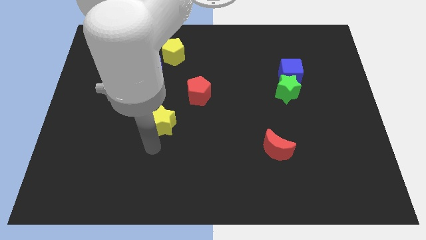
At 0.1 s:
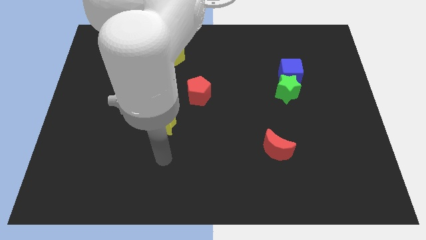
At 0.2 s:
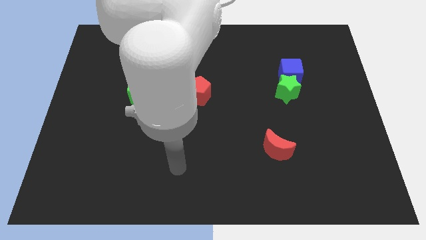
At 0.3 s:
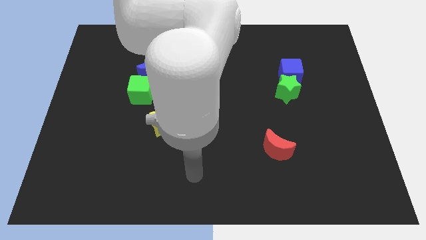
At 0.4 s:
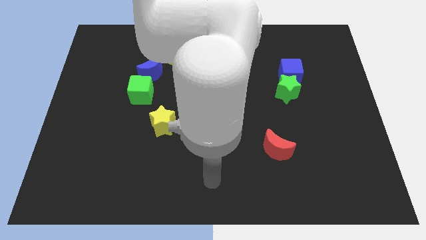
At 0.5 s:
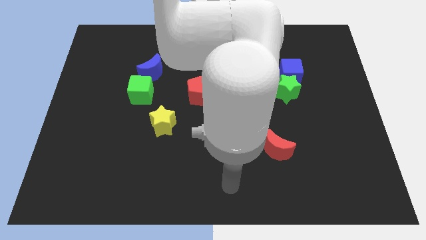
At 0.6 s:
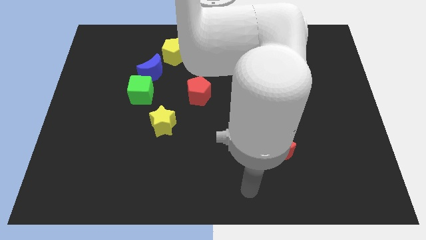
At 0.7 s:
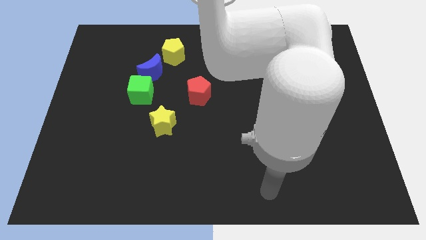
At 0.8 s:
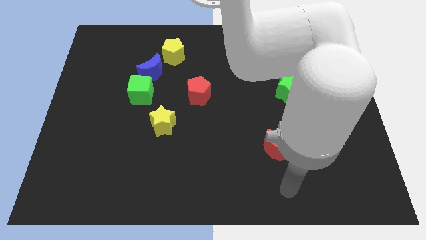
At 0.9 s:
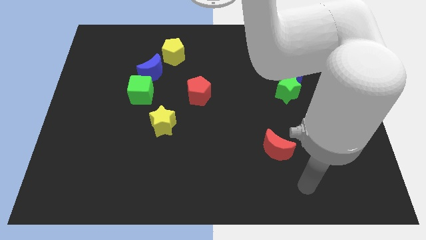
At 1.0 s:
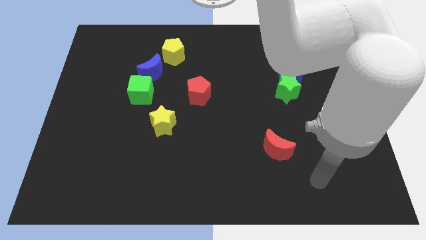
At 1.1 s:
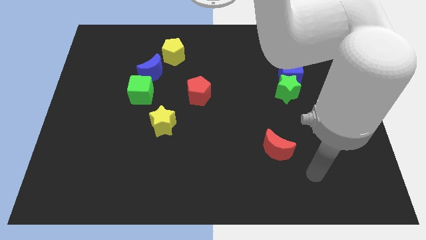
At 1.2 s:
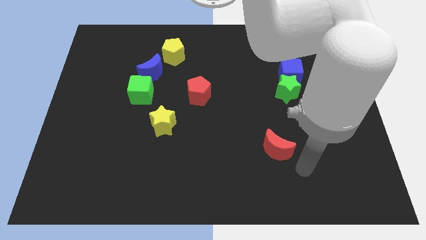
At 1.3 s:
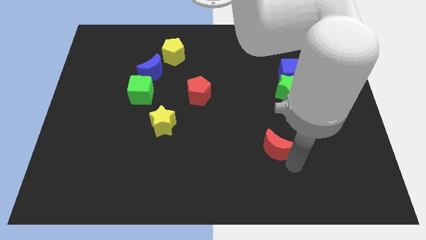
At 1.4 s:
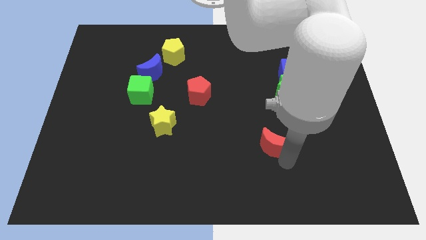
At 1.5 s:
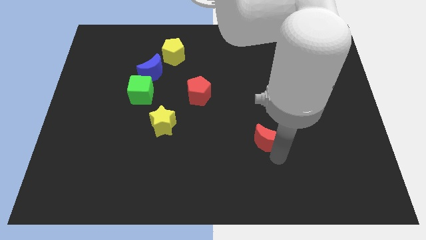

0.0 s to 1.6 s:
place the arm down to the red moon

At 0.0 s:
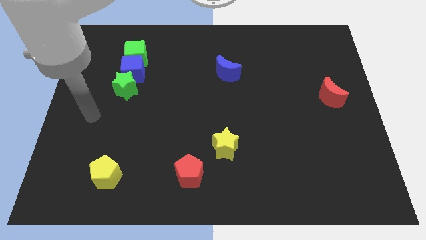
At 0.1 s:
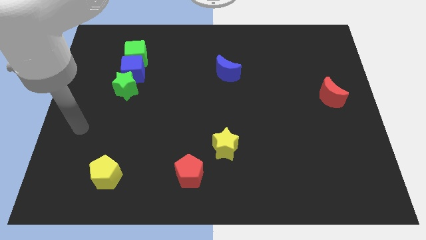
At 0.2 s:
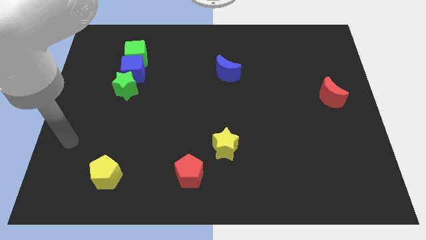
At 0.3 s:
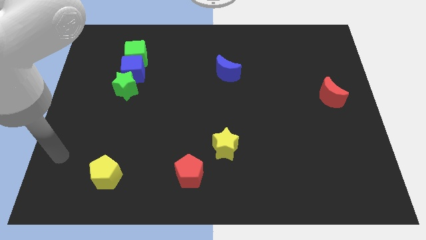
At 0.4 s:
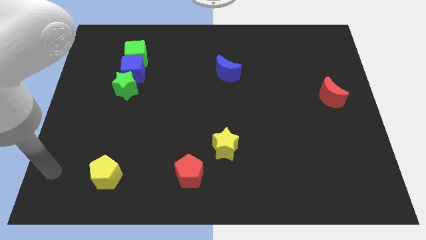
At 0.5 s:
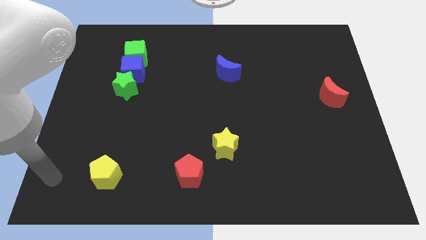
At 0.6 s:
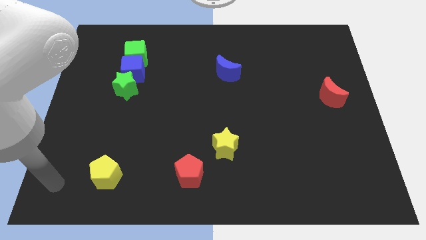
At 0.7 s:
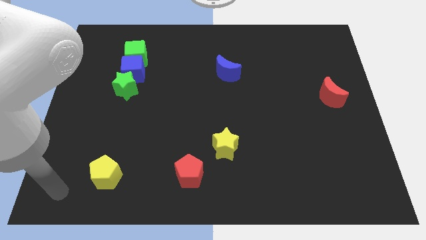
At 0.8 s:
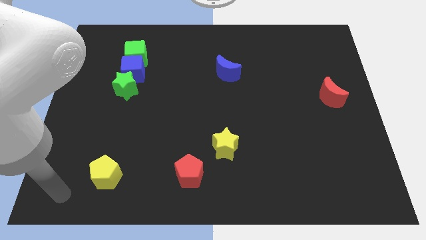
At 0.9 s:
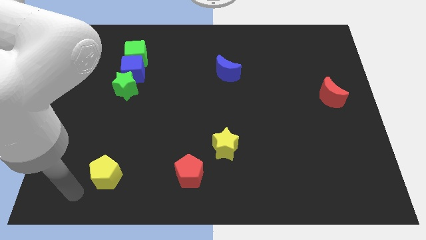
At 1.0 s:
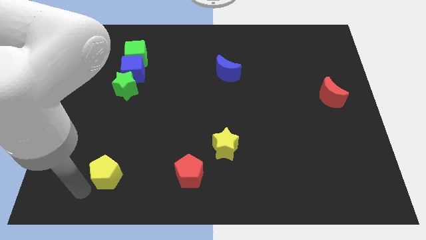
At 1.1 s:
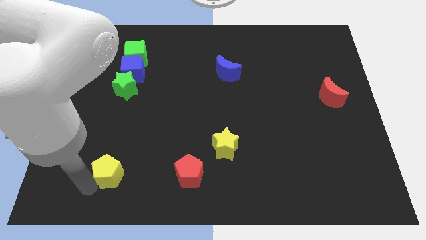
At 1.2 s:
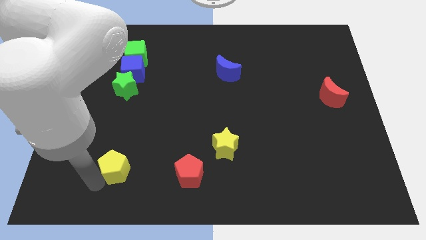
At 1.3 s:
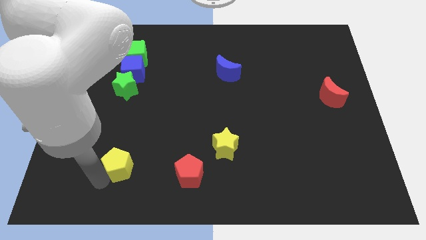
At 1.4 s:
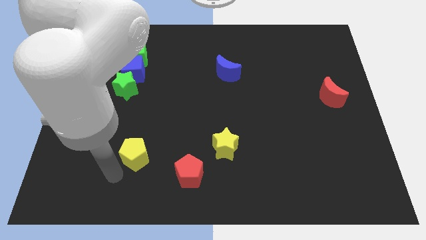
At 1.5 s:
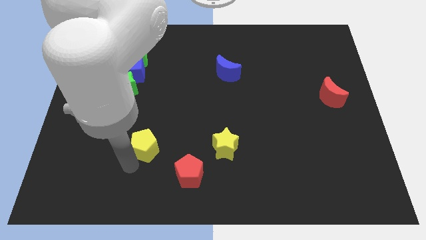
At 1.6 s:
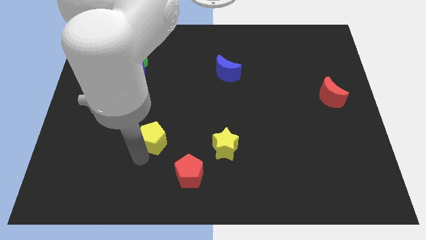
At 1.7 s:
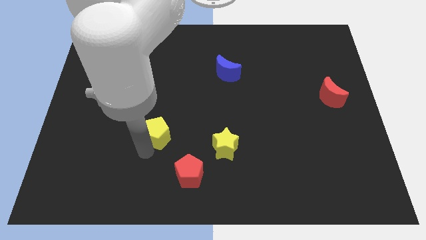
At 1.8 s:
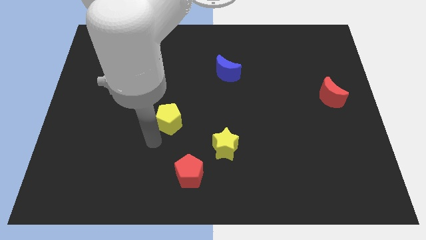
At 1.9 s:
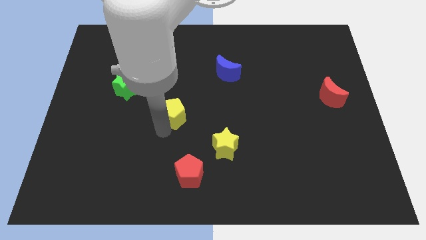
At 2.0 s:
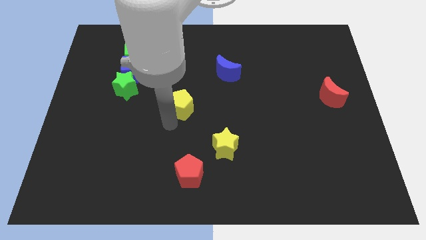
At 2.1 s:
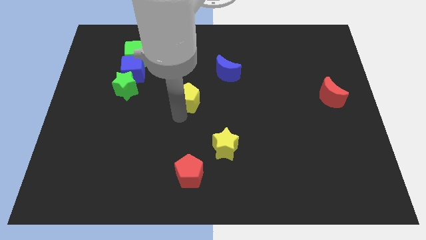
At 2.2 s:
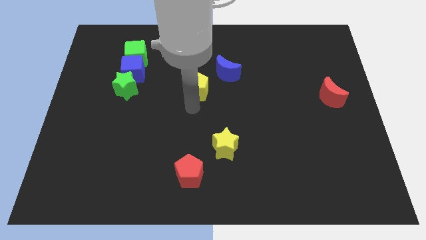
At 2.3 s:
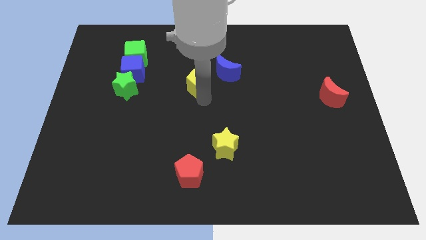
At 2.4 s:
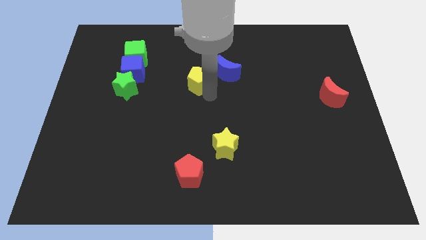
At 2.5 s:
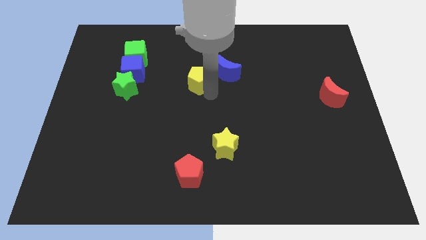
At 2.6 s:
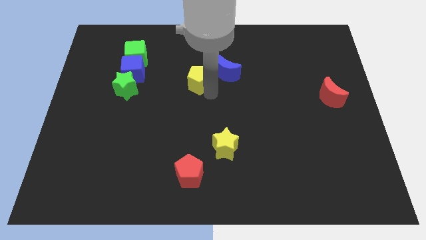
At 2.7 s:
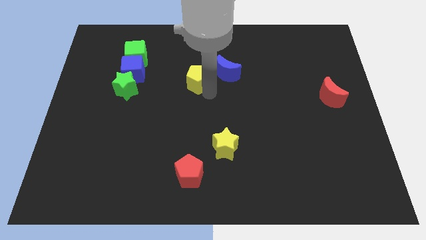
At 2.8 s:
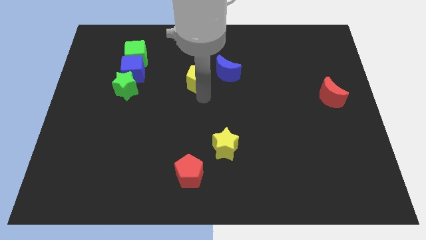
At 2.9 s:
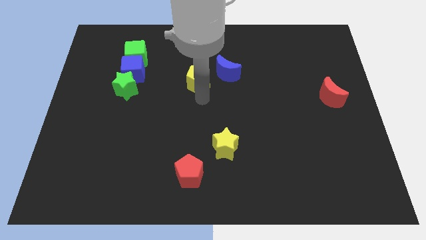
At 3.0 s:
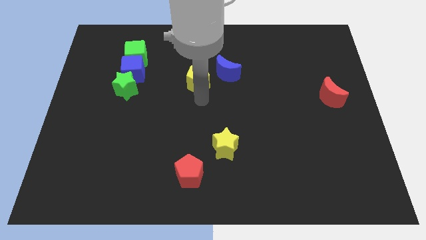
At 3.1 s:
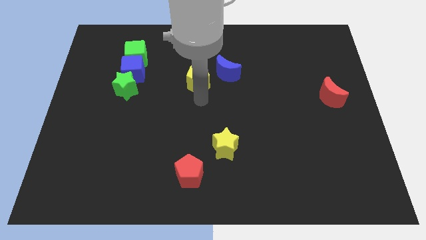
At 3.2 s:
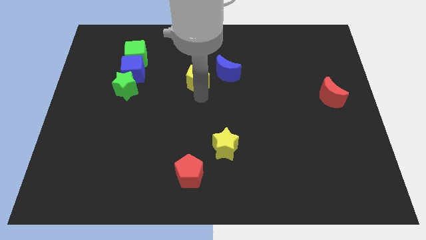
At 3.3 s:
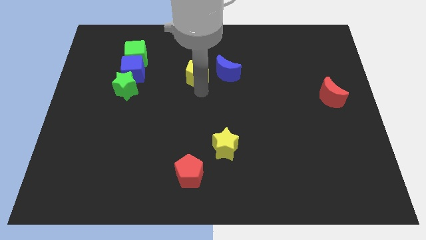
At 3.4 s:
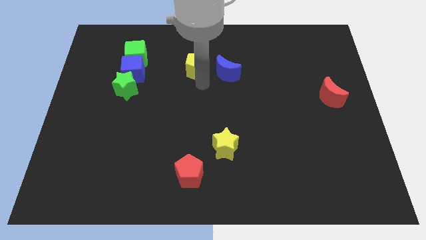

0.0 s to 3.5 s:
move the yellow pentagon to the left of the blue crescent

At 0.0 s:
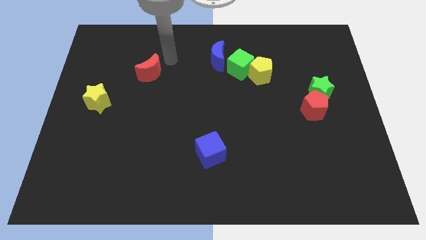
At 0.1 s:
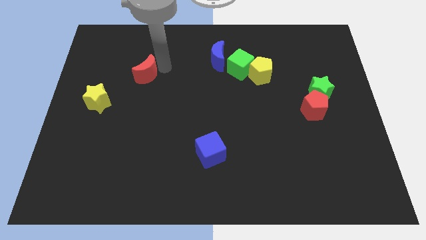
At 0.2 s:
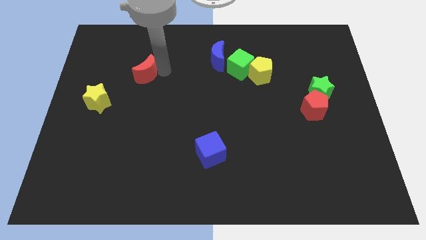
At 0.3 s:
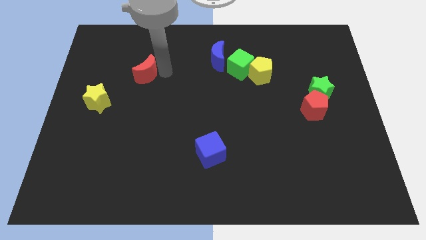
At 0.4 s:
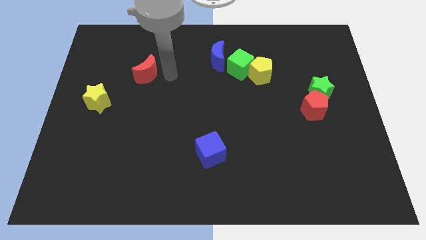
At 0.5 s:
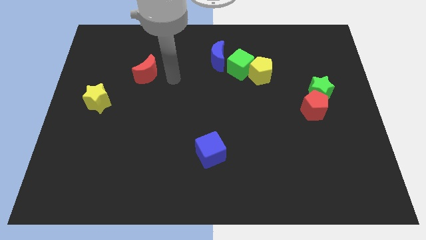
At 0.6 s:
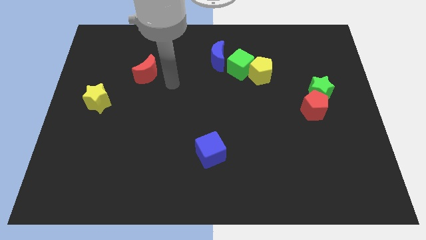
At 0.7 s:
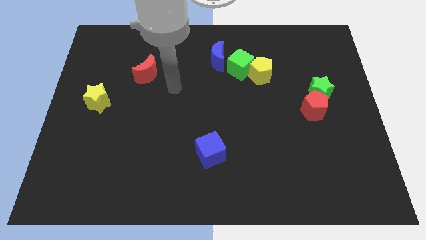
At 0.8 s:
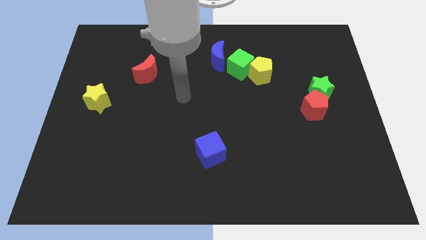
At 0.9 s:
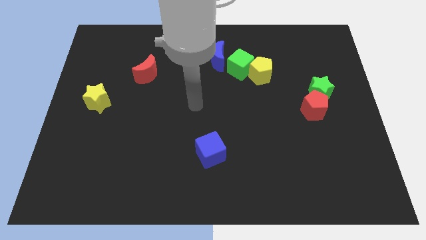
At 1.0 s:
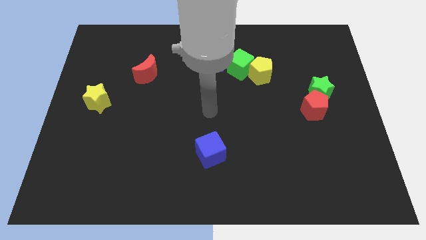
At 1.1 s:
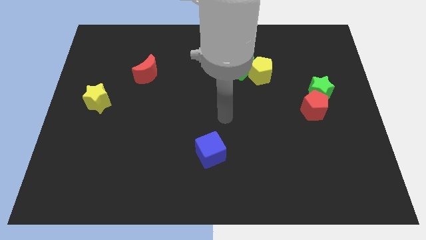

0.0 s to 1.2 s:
move your arm to the center

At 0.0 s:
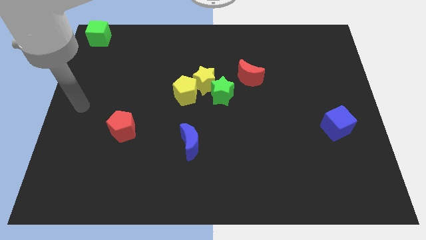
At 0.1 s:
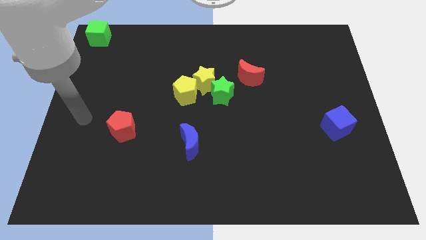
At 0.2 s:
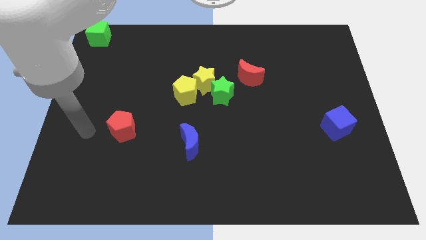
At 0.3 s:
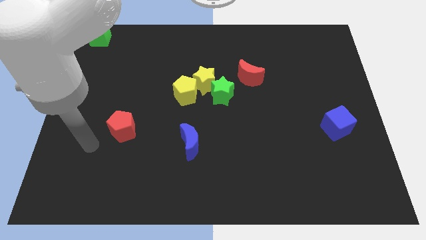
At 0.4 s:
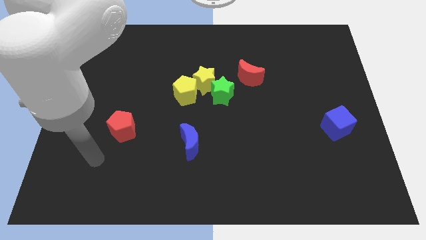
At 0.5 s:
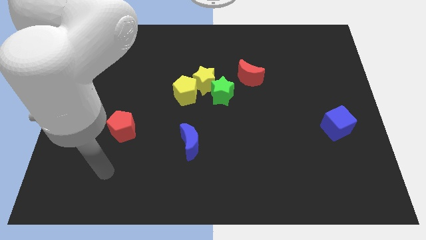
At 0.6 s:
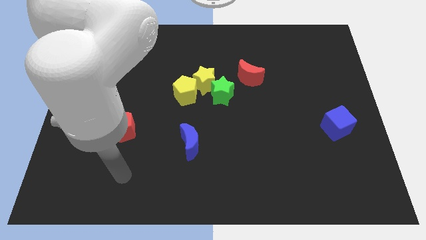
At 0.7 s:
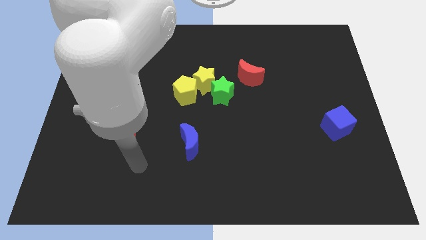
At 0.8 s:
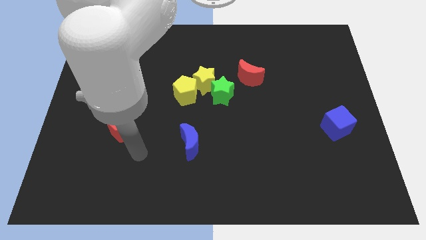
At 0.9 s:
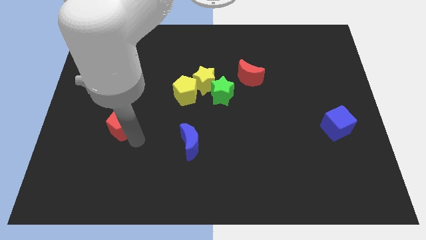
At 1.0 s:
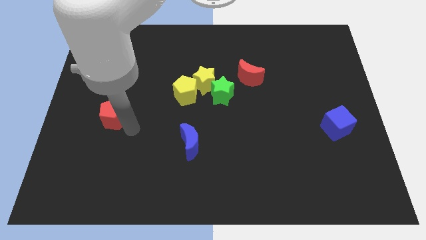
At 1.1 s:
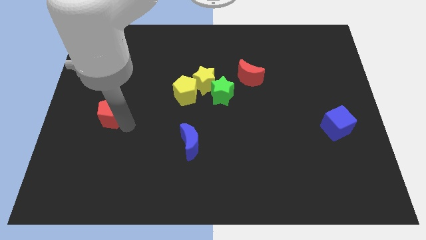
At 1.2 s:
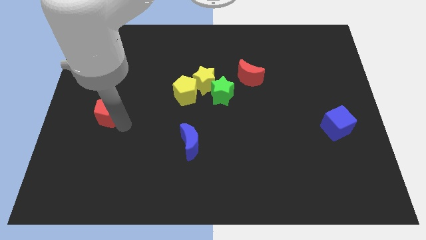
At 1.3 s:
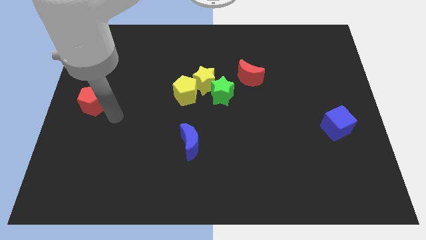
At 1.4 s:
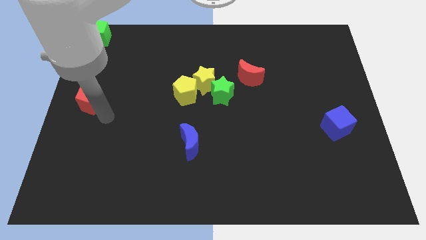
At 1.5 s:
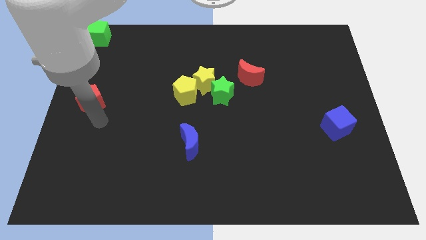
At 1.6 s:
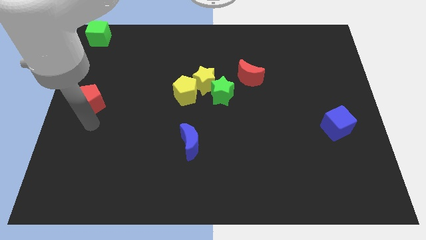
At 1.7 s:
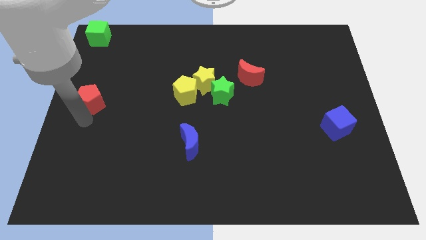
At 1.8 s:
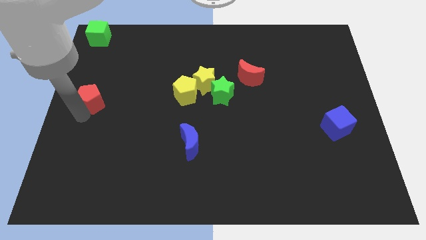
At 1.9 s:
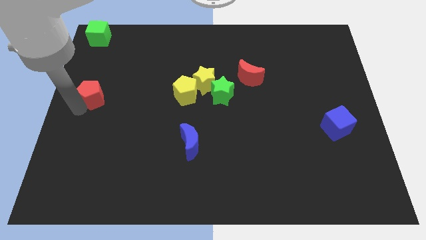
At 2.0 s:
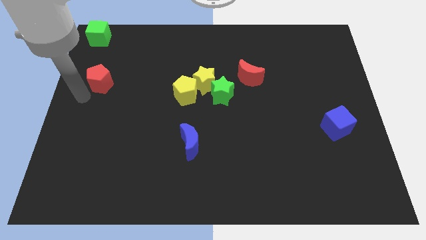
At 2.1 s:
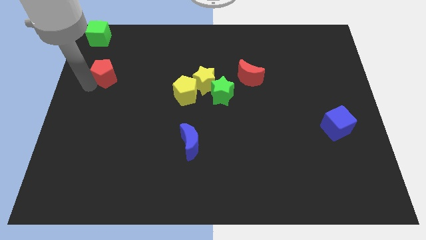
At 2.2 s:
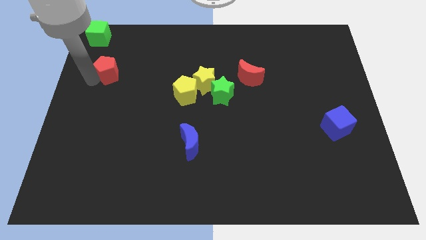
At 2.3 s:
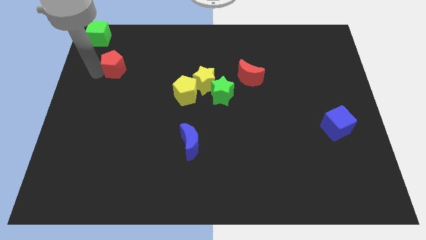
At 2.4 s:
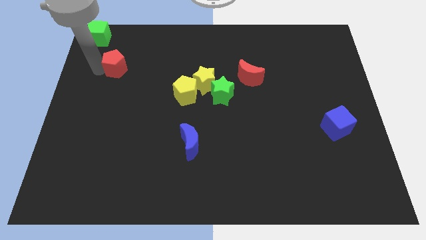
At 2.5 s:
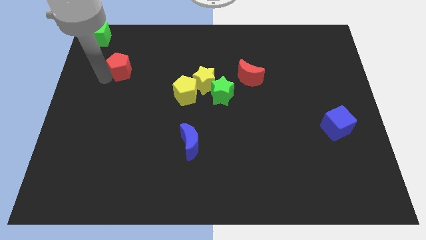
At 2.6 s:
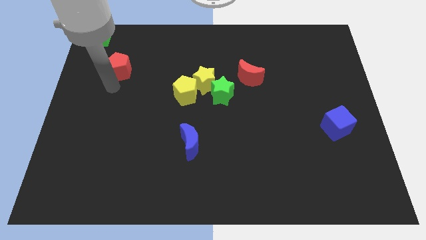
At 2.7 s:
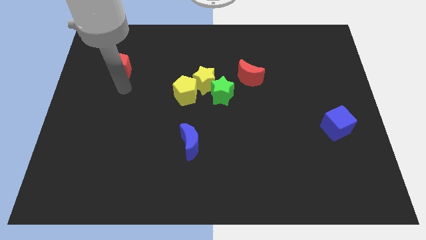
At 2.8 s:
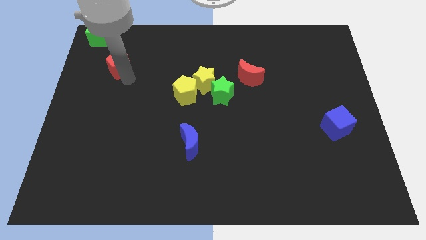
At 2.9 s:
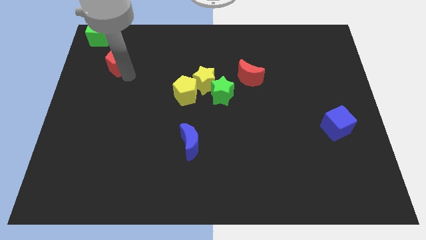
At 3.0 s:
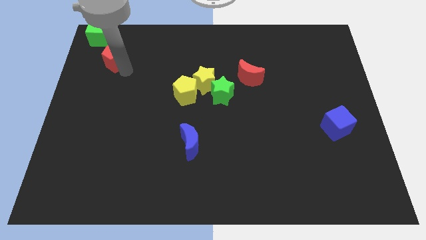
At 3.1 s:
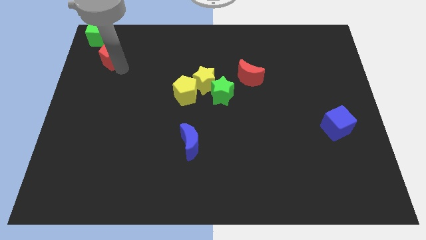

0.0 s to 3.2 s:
move red pentagon right below the green cube
